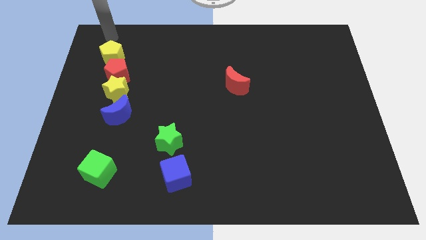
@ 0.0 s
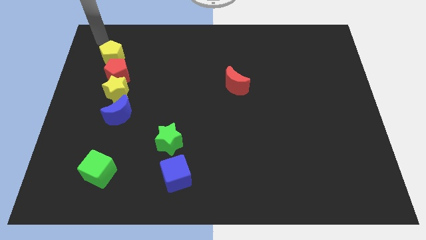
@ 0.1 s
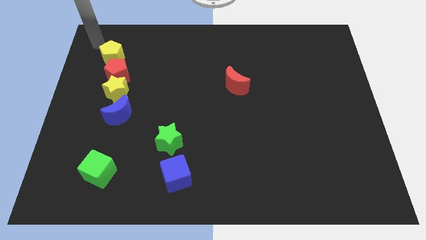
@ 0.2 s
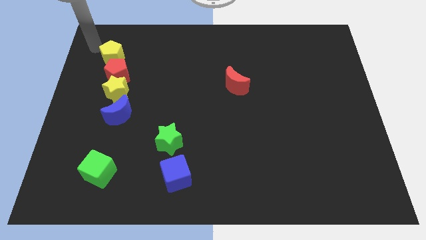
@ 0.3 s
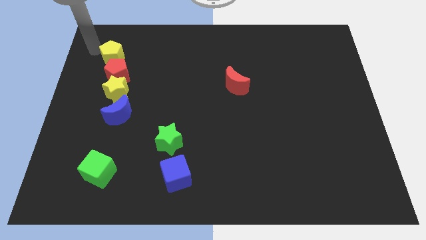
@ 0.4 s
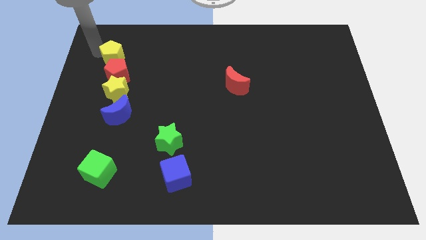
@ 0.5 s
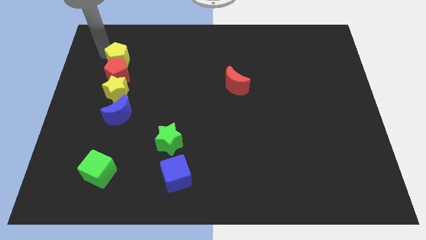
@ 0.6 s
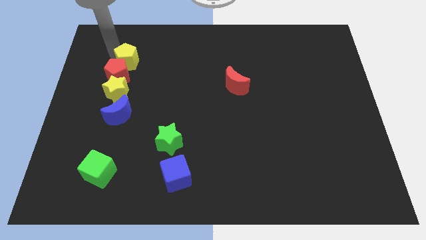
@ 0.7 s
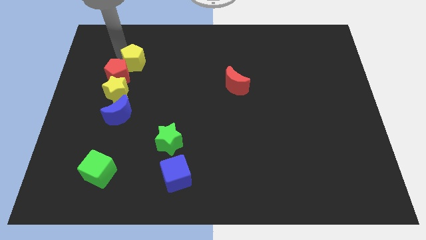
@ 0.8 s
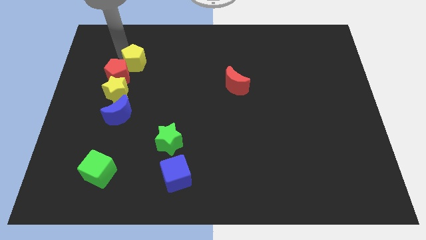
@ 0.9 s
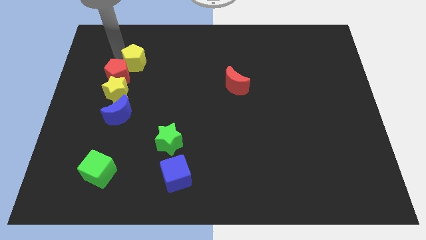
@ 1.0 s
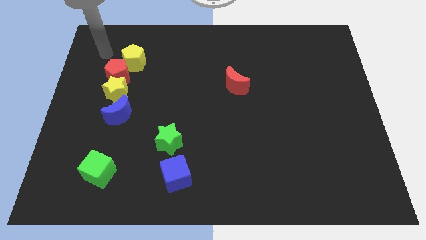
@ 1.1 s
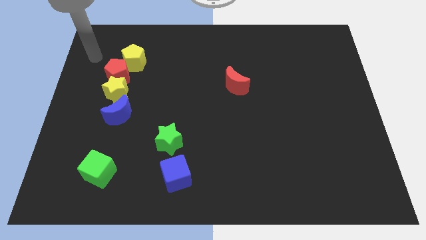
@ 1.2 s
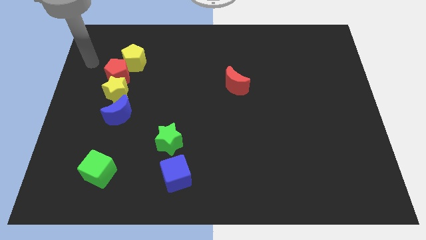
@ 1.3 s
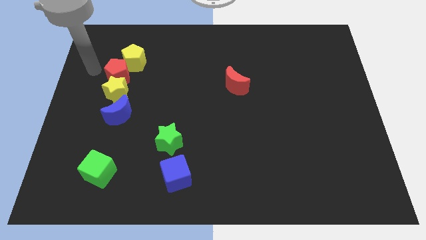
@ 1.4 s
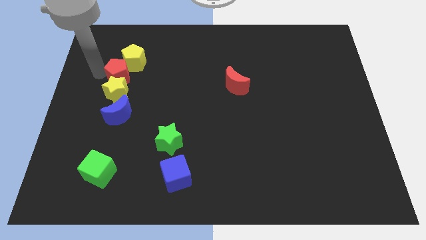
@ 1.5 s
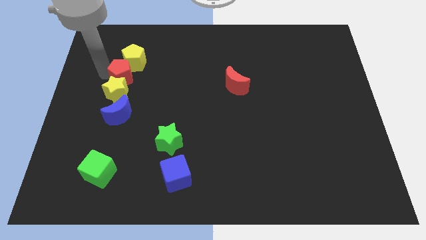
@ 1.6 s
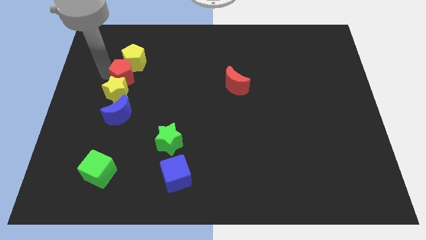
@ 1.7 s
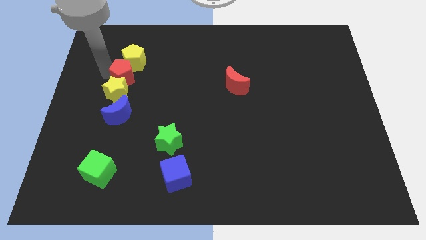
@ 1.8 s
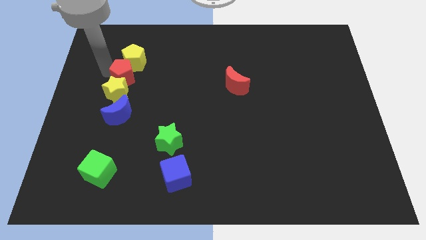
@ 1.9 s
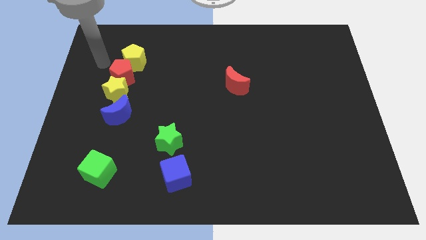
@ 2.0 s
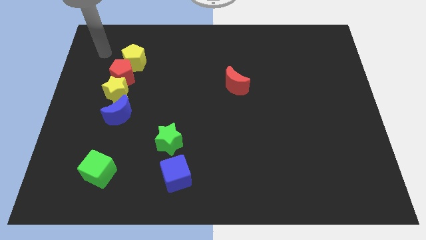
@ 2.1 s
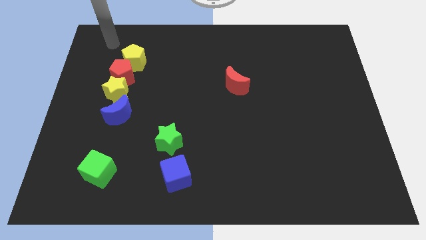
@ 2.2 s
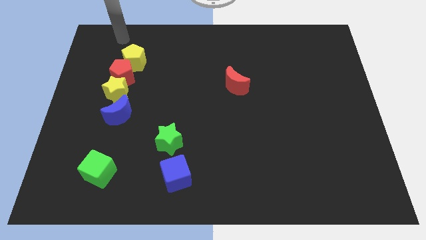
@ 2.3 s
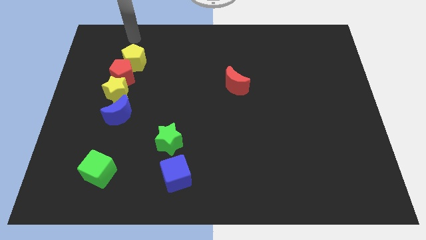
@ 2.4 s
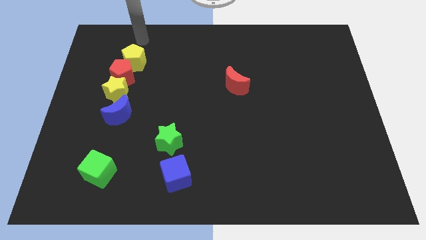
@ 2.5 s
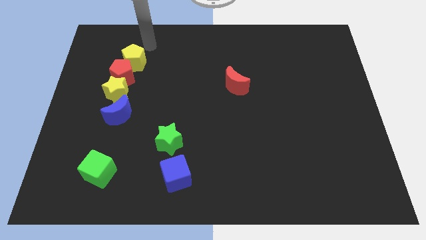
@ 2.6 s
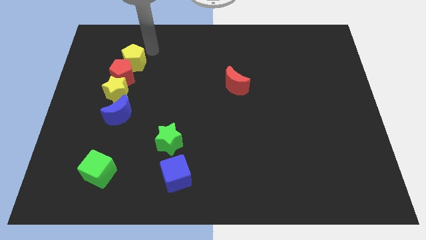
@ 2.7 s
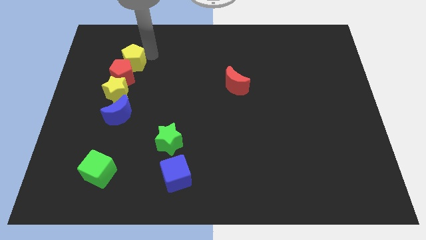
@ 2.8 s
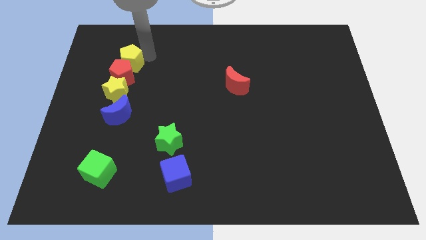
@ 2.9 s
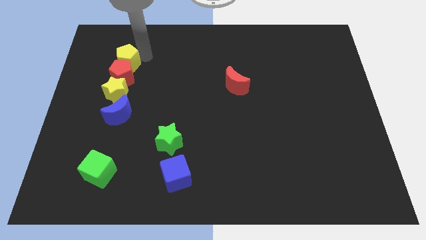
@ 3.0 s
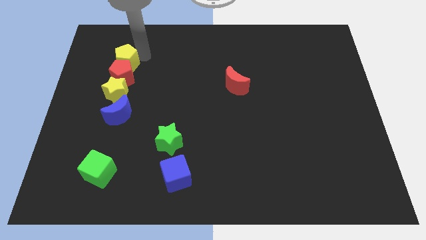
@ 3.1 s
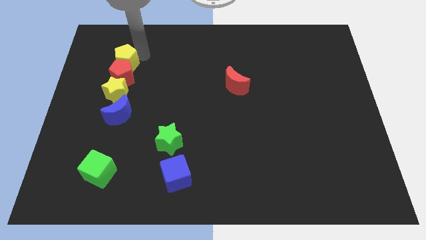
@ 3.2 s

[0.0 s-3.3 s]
push the yellow pentagon to the top of red pentagon

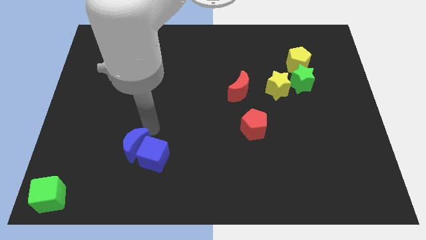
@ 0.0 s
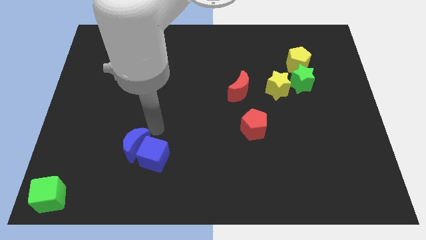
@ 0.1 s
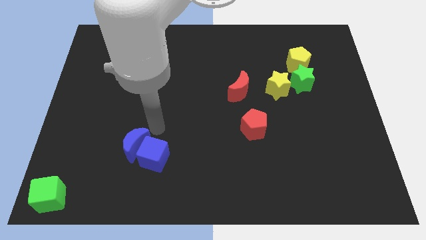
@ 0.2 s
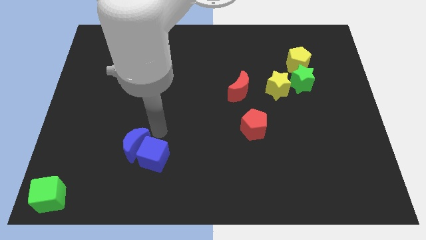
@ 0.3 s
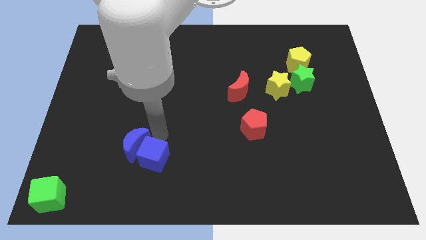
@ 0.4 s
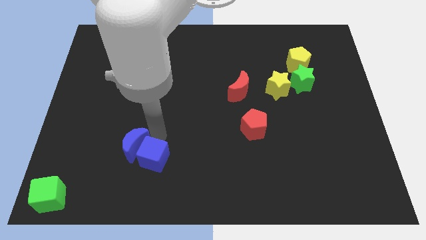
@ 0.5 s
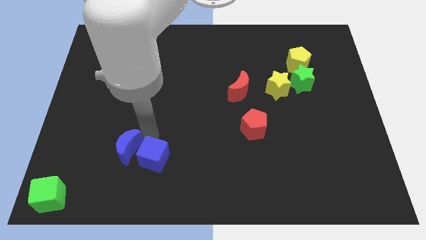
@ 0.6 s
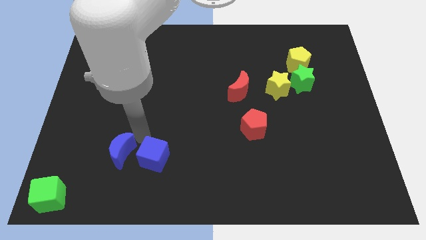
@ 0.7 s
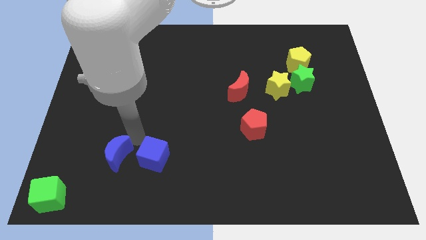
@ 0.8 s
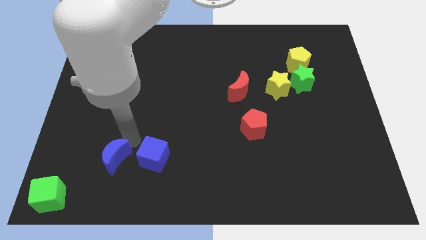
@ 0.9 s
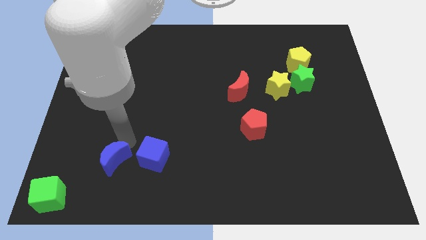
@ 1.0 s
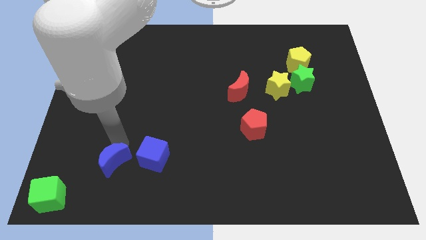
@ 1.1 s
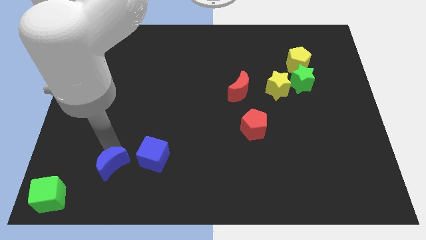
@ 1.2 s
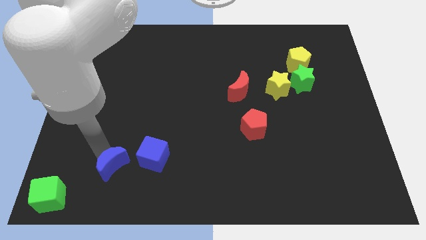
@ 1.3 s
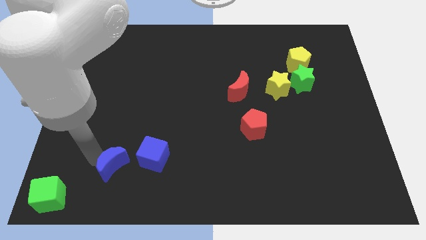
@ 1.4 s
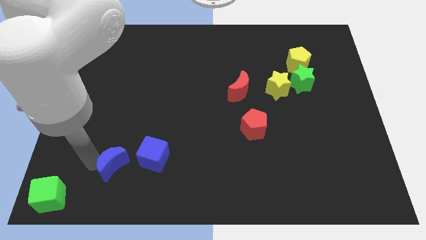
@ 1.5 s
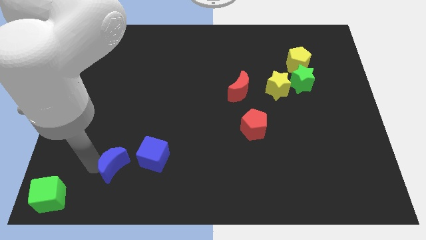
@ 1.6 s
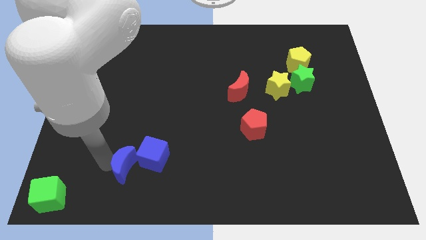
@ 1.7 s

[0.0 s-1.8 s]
separate the blue moon and the blue cube

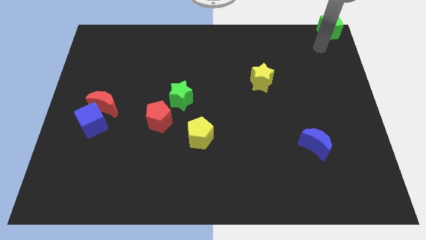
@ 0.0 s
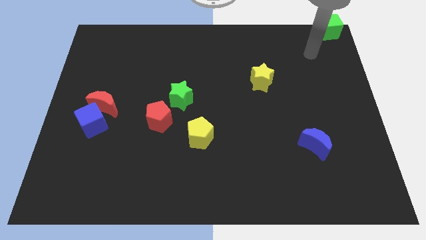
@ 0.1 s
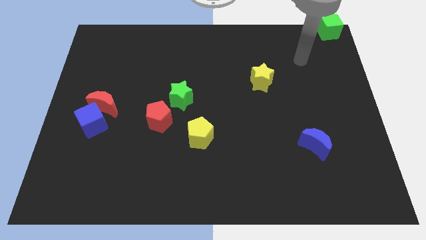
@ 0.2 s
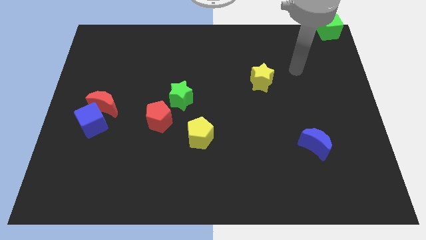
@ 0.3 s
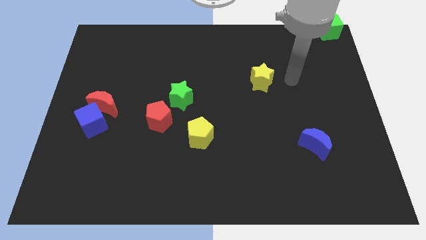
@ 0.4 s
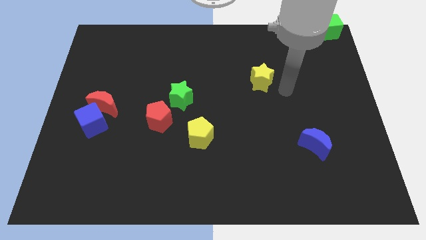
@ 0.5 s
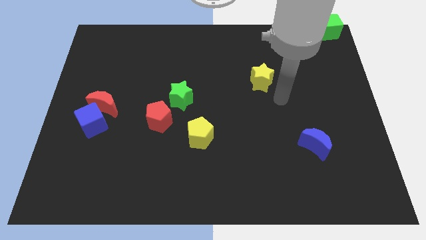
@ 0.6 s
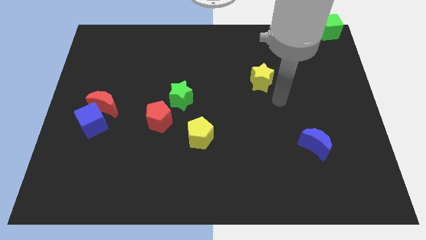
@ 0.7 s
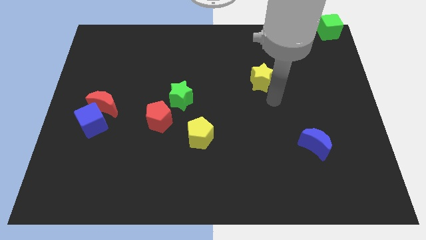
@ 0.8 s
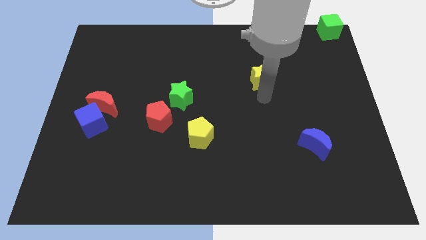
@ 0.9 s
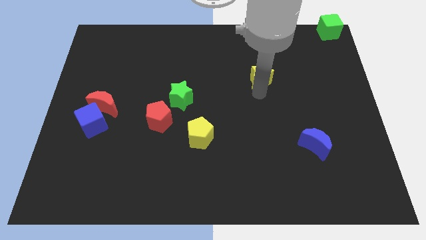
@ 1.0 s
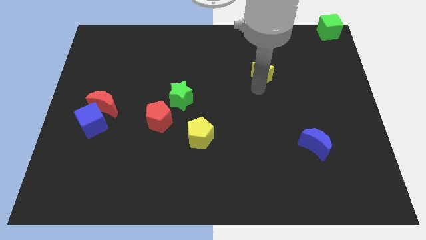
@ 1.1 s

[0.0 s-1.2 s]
move your arm into the yellow star

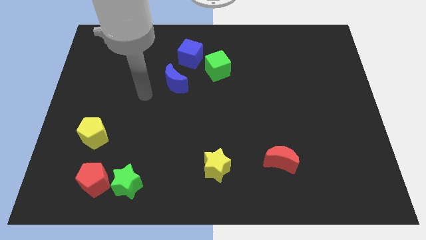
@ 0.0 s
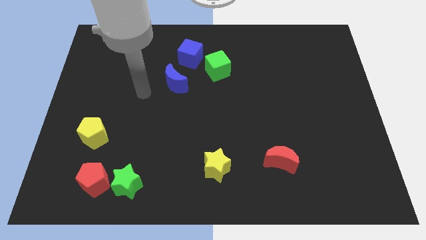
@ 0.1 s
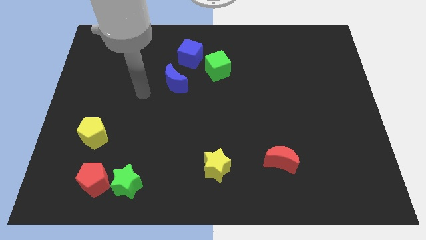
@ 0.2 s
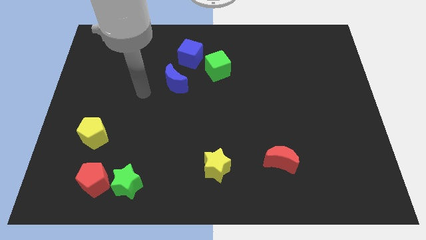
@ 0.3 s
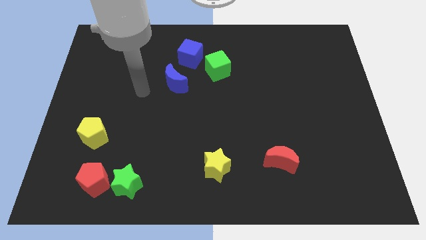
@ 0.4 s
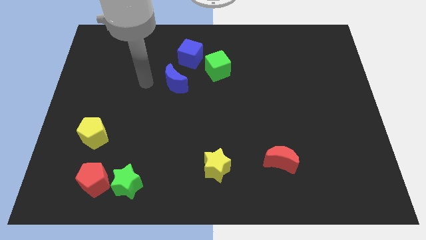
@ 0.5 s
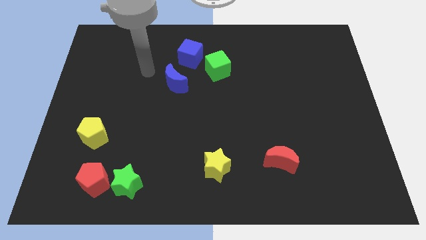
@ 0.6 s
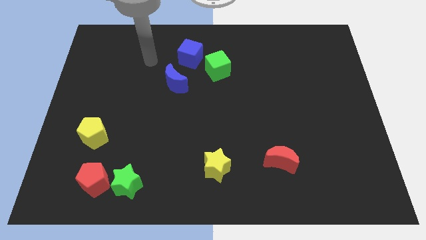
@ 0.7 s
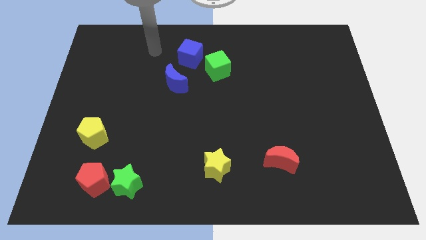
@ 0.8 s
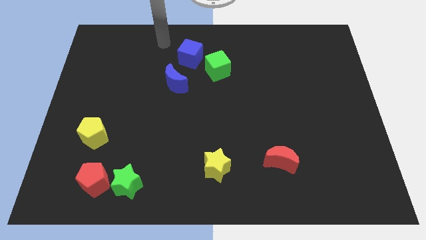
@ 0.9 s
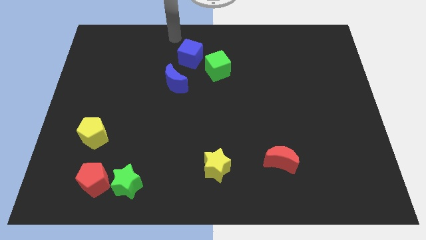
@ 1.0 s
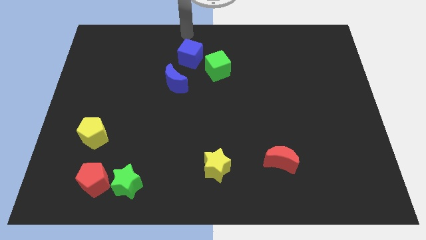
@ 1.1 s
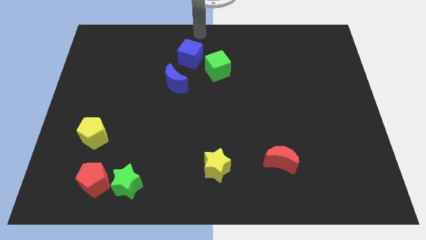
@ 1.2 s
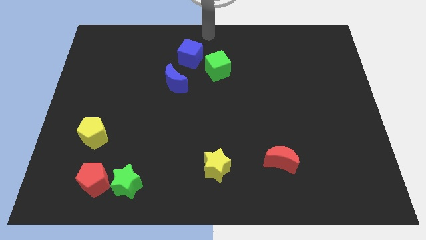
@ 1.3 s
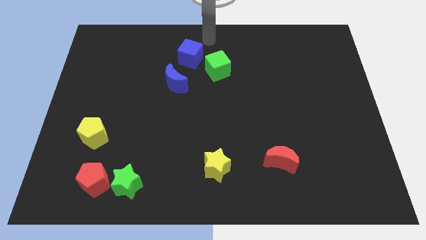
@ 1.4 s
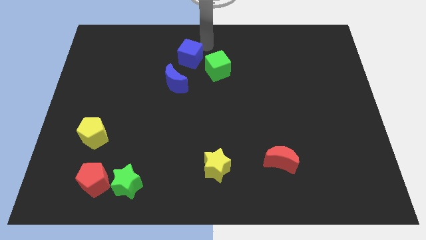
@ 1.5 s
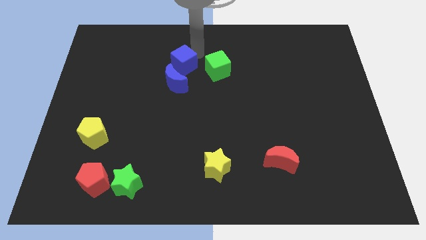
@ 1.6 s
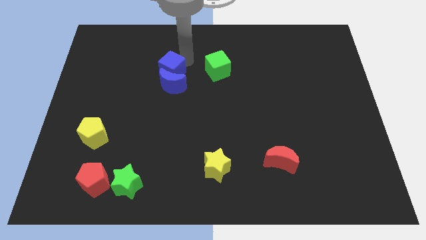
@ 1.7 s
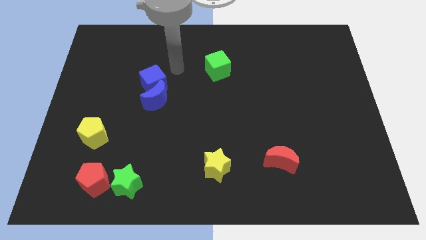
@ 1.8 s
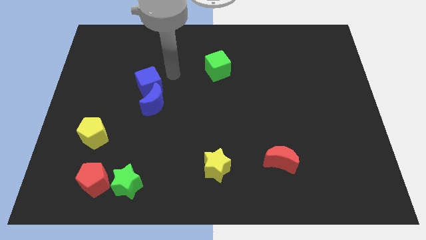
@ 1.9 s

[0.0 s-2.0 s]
move the blue cube into the blue moon

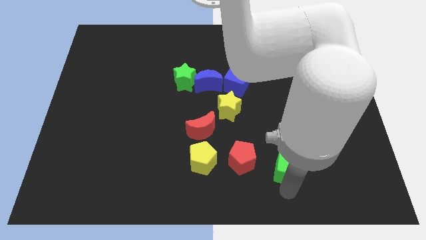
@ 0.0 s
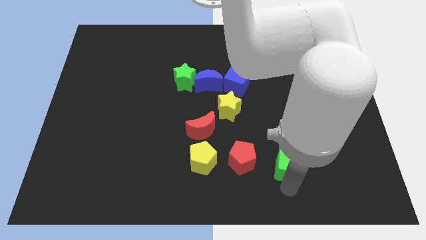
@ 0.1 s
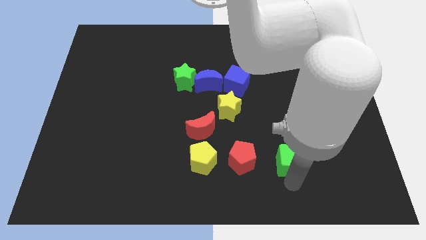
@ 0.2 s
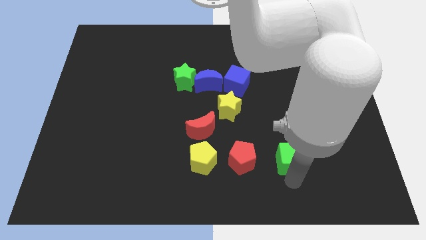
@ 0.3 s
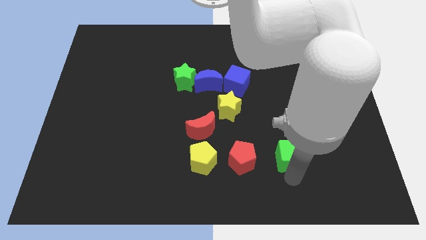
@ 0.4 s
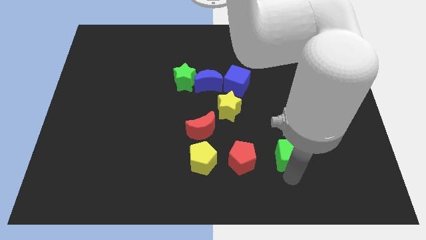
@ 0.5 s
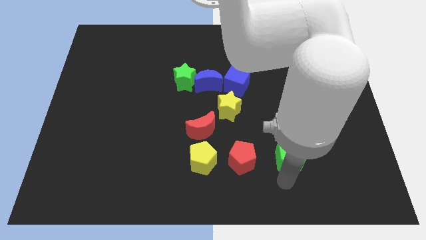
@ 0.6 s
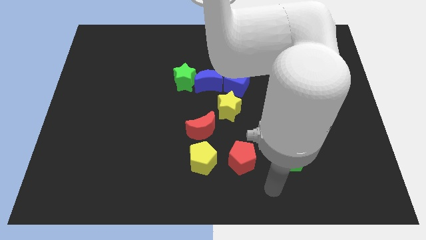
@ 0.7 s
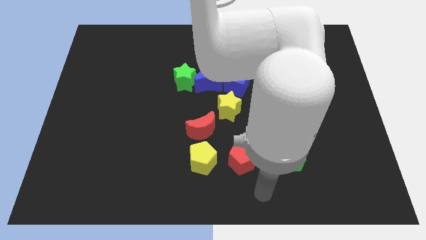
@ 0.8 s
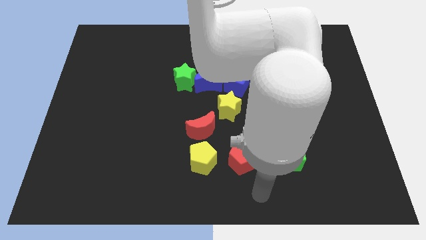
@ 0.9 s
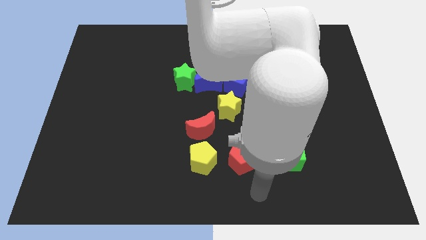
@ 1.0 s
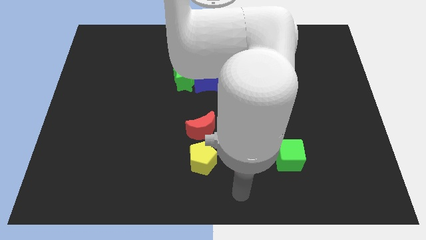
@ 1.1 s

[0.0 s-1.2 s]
slide green cube up to the right of red pentagon
